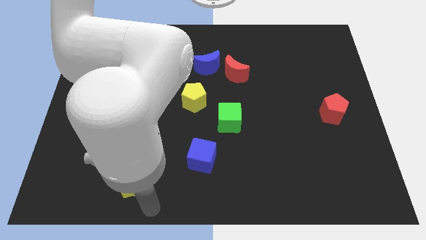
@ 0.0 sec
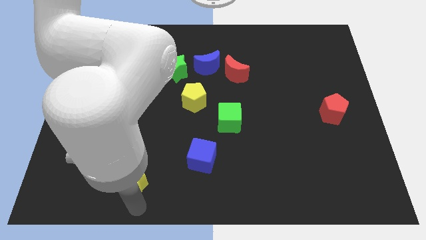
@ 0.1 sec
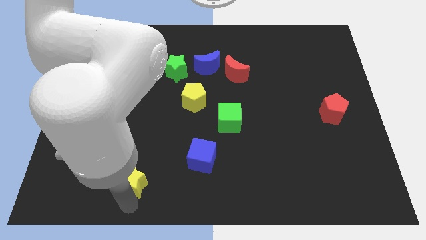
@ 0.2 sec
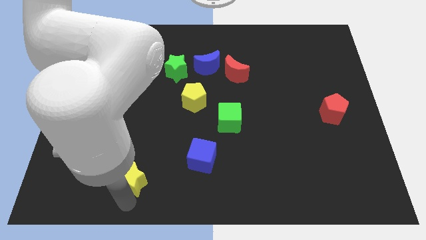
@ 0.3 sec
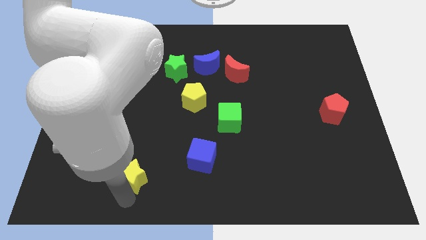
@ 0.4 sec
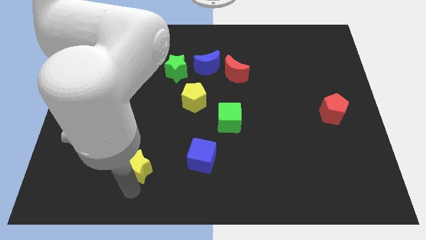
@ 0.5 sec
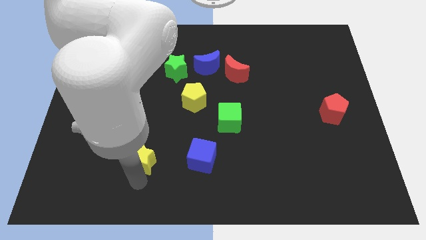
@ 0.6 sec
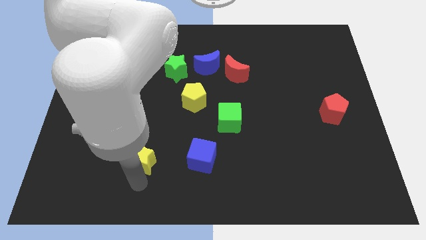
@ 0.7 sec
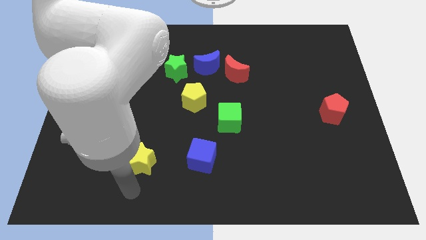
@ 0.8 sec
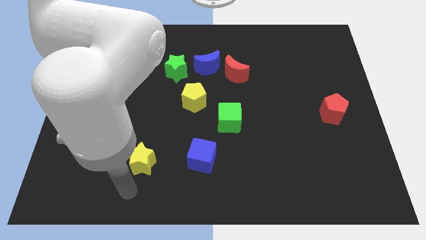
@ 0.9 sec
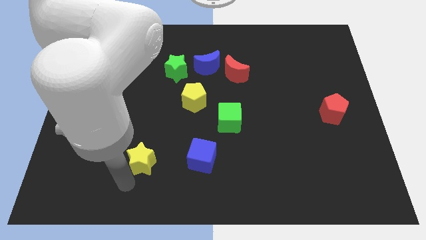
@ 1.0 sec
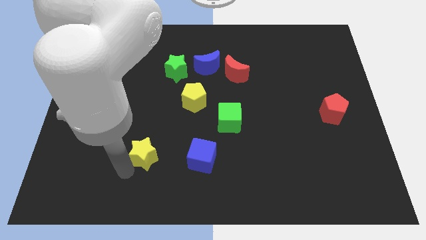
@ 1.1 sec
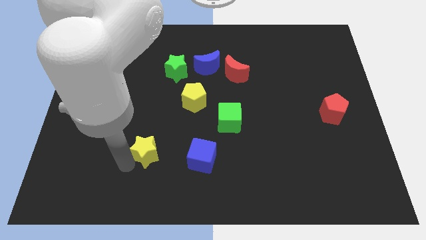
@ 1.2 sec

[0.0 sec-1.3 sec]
slide the yellow star parallel to the blue cube

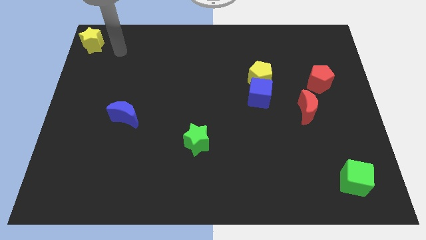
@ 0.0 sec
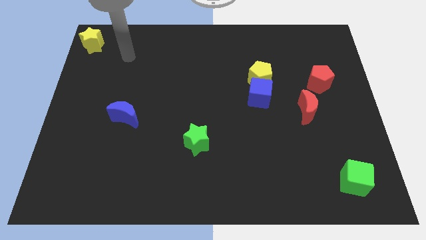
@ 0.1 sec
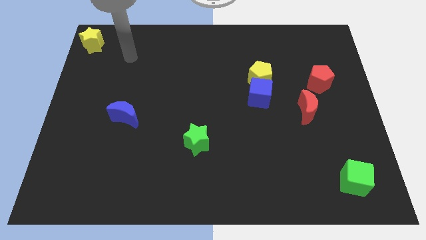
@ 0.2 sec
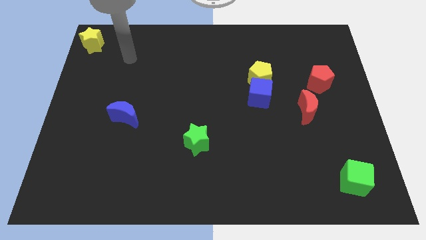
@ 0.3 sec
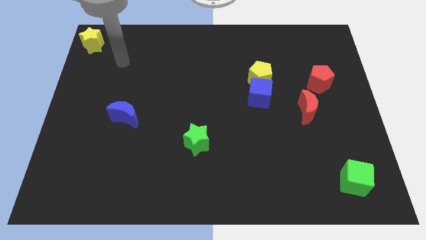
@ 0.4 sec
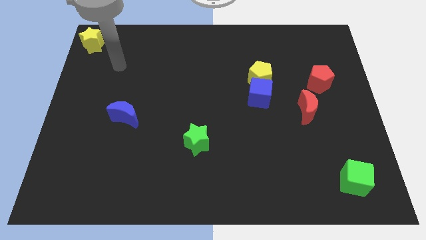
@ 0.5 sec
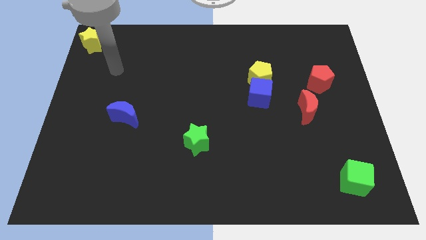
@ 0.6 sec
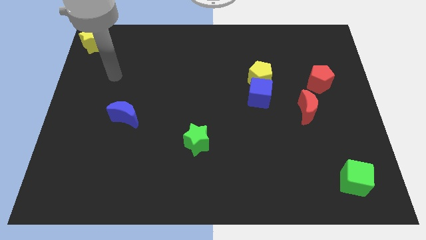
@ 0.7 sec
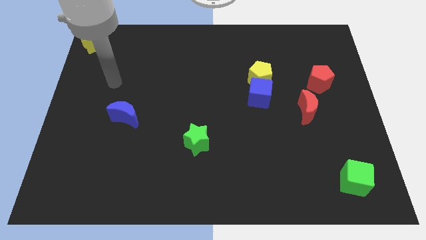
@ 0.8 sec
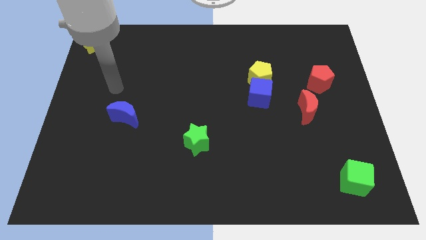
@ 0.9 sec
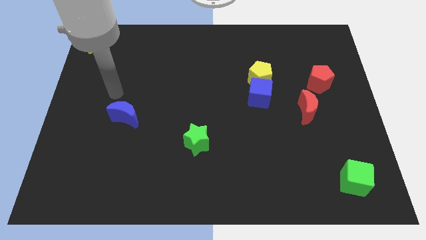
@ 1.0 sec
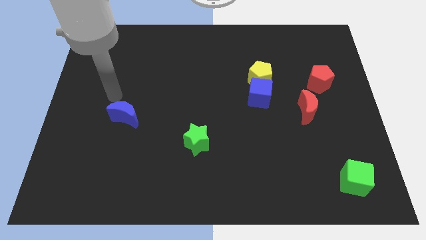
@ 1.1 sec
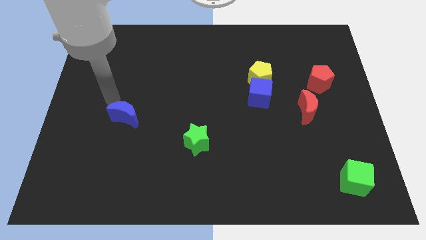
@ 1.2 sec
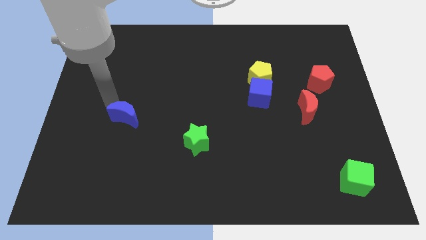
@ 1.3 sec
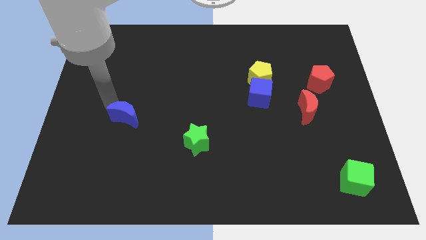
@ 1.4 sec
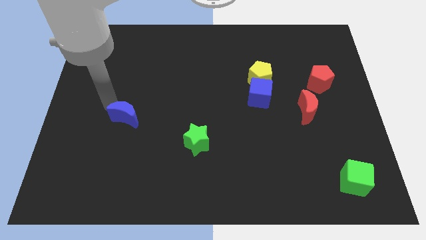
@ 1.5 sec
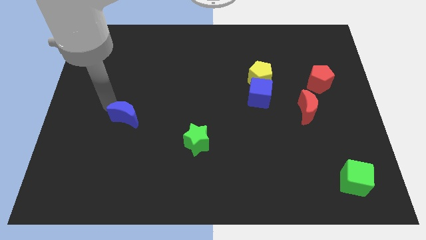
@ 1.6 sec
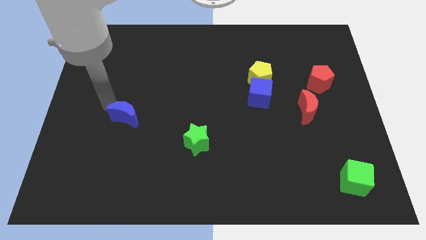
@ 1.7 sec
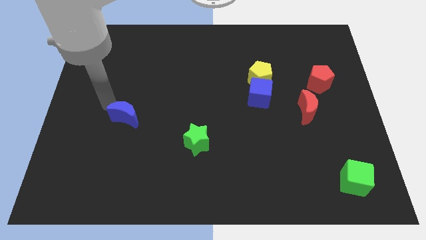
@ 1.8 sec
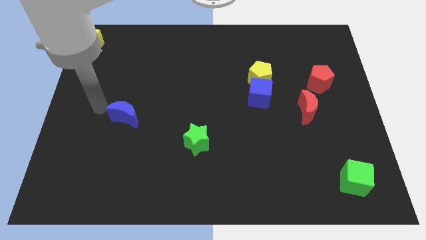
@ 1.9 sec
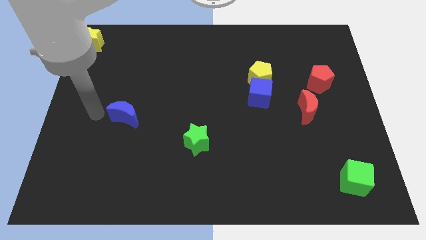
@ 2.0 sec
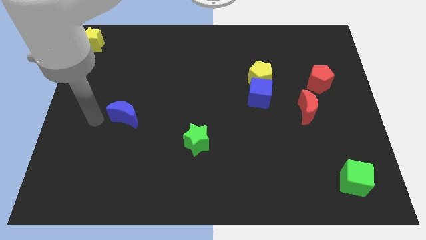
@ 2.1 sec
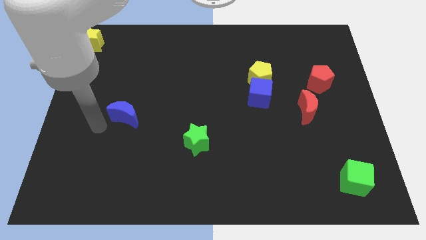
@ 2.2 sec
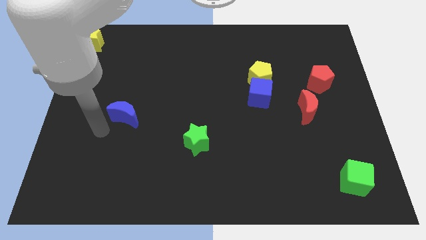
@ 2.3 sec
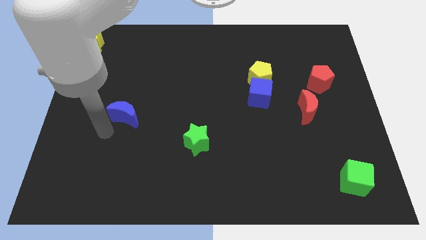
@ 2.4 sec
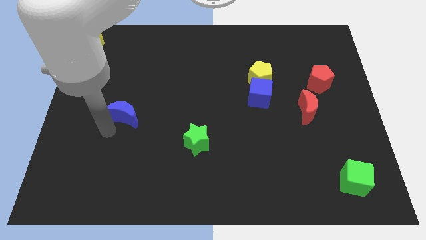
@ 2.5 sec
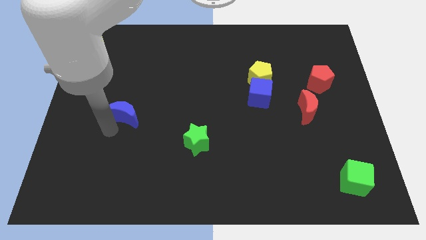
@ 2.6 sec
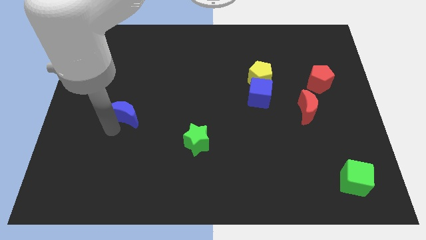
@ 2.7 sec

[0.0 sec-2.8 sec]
point your arm at the bottom of the blue crescent

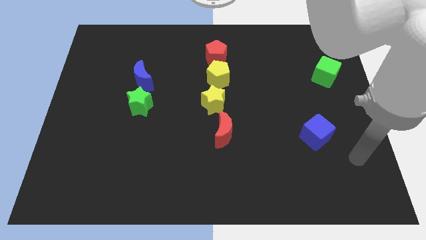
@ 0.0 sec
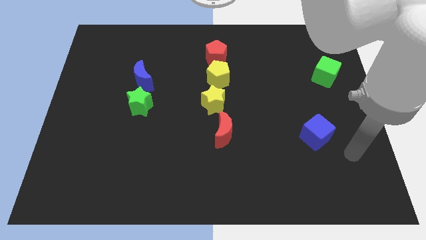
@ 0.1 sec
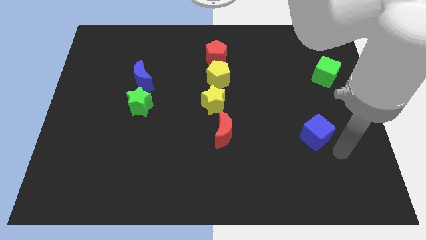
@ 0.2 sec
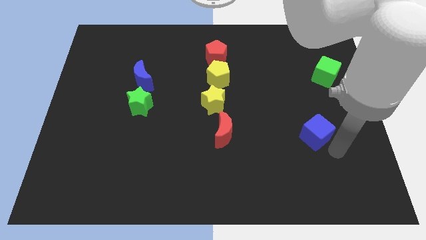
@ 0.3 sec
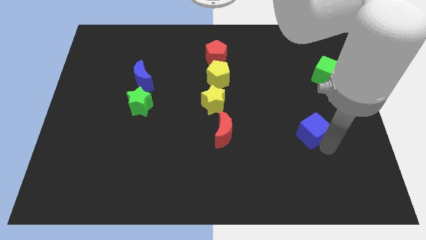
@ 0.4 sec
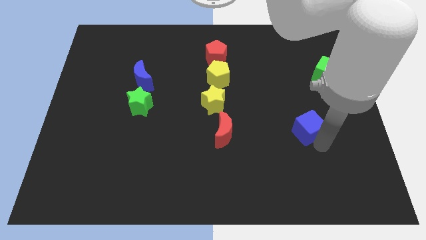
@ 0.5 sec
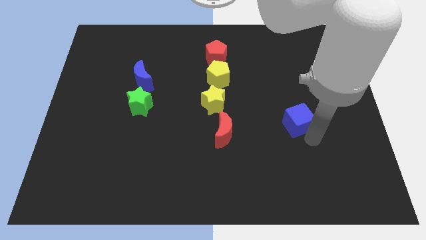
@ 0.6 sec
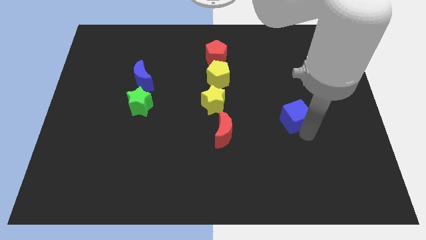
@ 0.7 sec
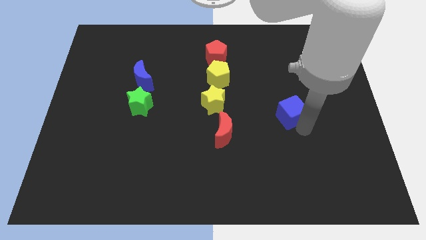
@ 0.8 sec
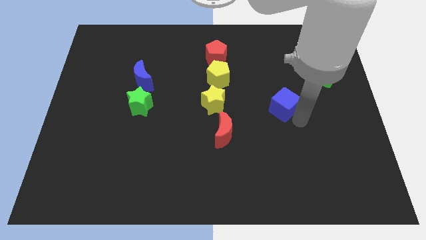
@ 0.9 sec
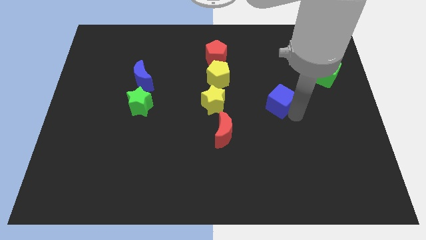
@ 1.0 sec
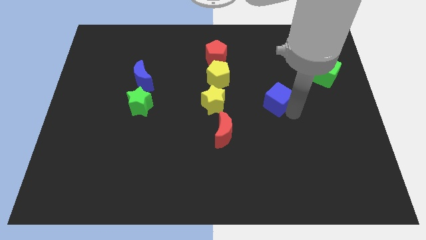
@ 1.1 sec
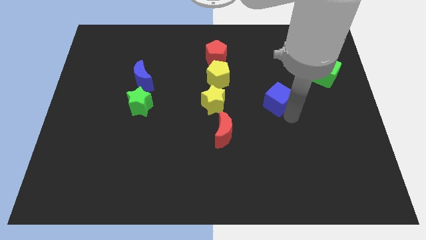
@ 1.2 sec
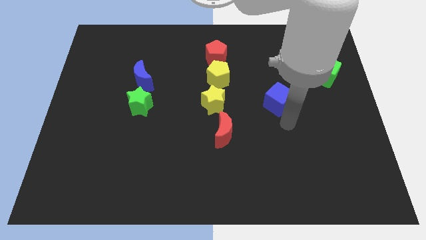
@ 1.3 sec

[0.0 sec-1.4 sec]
push blue cube to the right side of the yellow star

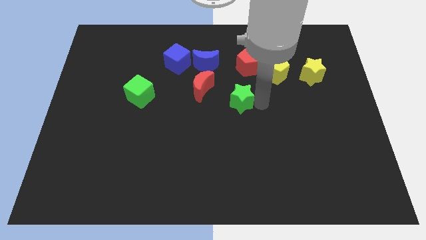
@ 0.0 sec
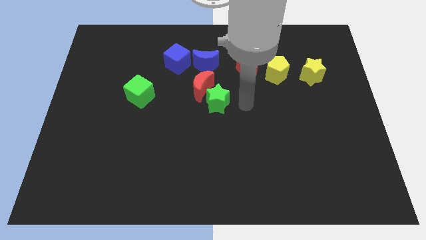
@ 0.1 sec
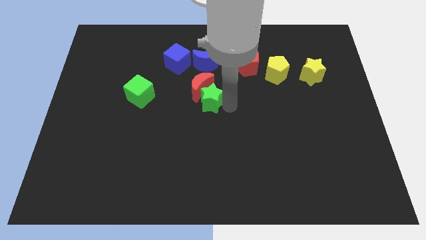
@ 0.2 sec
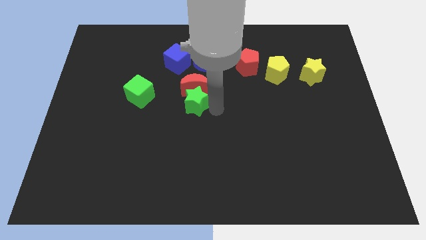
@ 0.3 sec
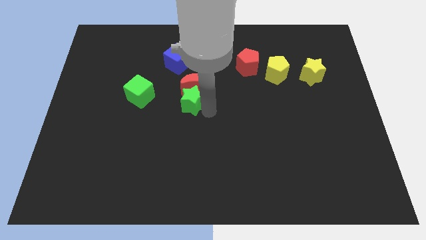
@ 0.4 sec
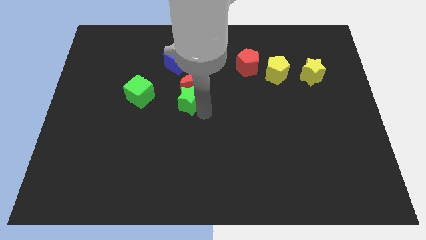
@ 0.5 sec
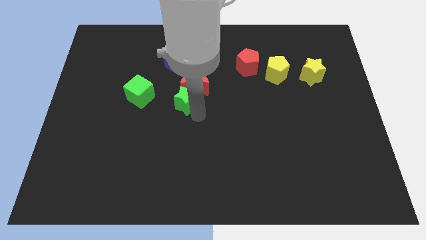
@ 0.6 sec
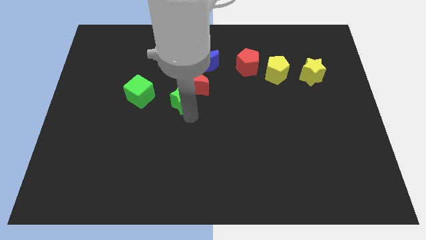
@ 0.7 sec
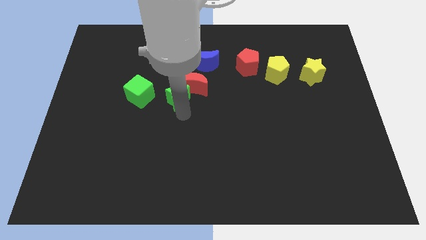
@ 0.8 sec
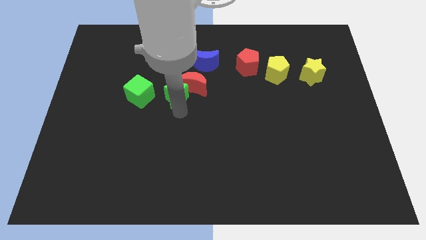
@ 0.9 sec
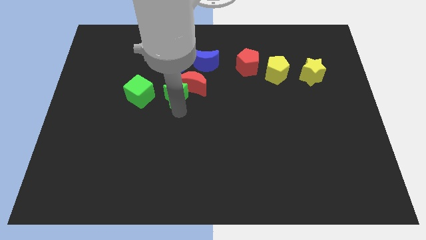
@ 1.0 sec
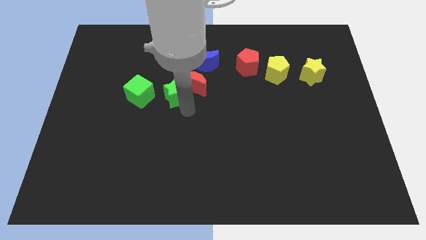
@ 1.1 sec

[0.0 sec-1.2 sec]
move the green star left to the red crescent

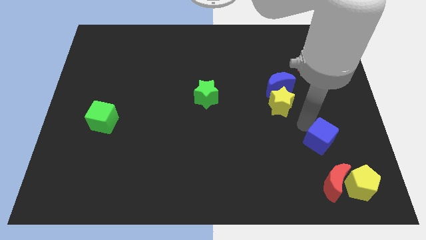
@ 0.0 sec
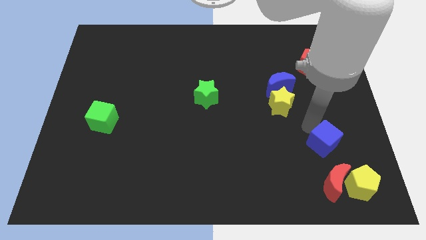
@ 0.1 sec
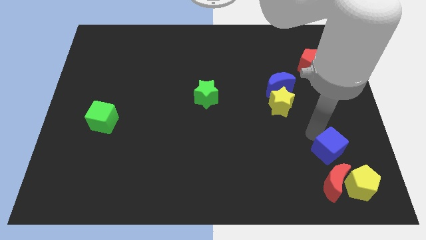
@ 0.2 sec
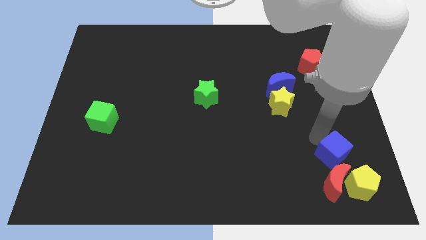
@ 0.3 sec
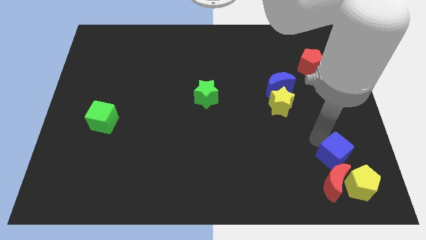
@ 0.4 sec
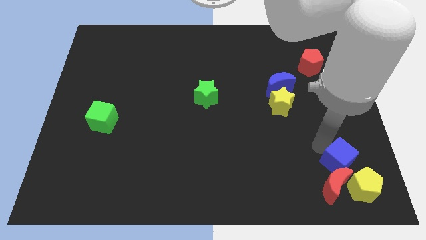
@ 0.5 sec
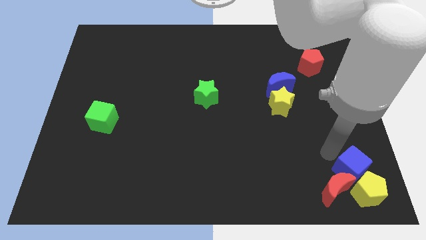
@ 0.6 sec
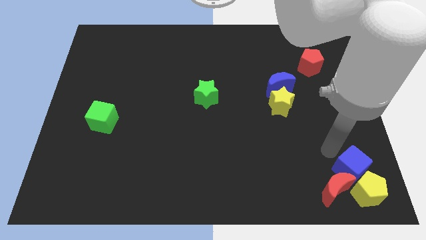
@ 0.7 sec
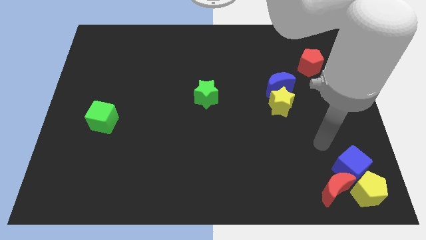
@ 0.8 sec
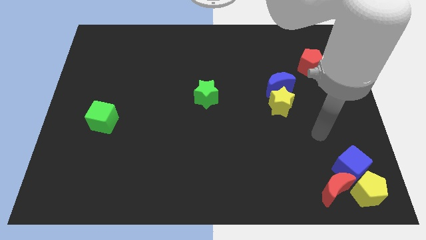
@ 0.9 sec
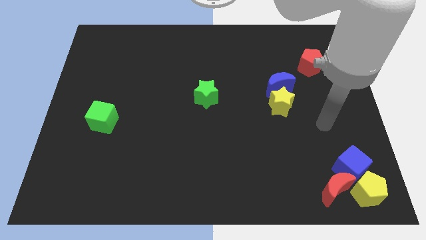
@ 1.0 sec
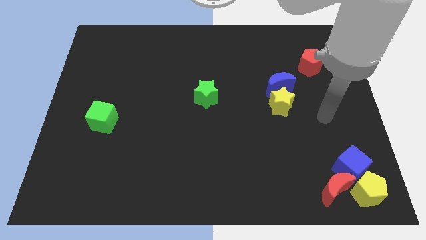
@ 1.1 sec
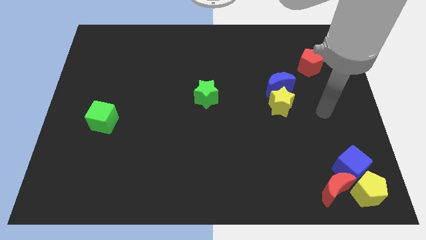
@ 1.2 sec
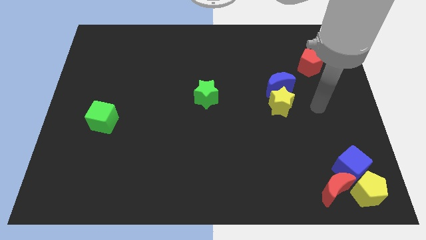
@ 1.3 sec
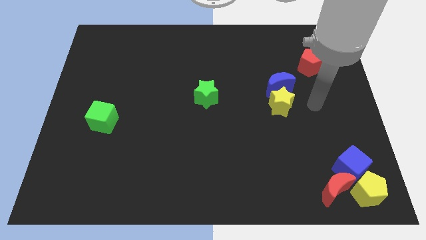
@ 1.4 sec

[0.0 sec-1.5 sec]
put the blue cube into the yellow pentagon

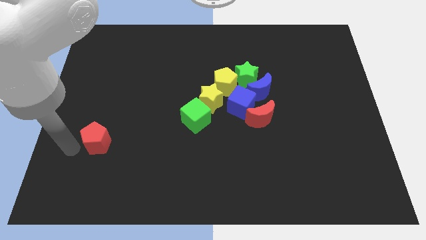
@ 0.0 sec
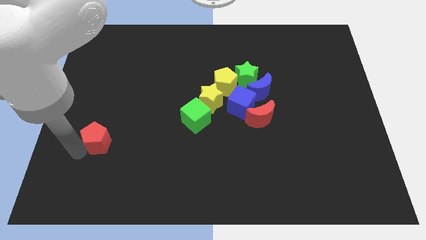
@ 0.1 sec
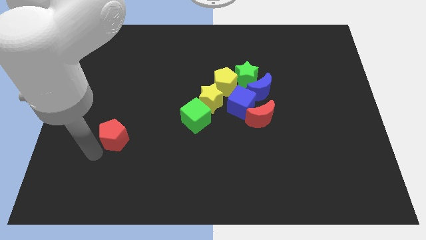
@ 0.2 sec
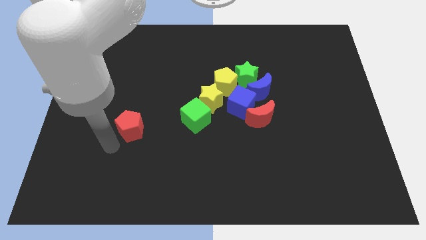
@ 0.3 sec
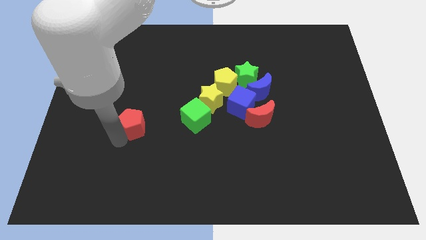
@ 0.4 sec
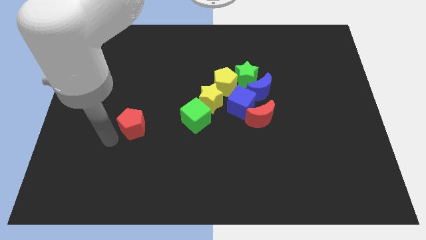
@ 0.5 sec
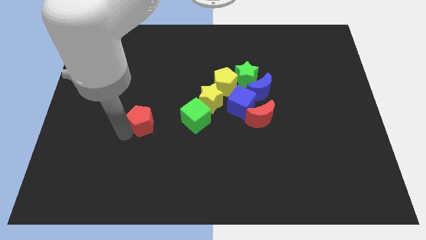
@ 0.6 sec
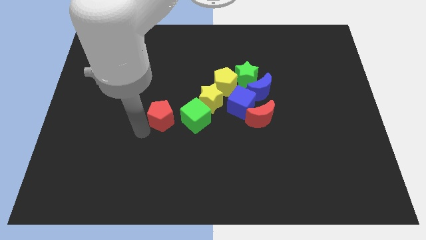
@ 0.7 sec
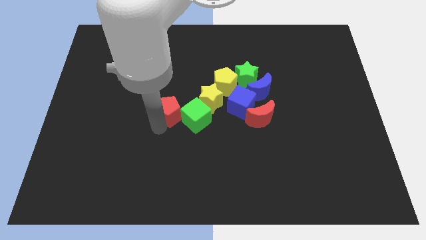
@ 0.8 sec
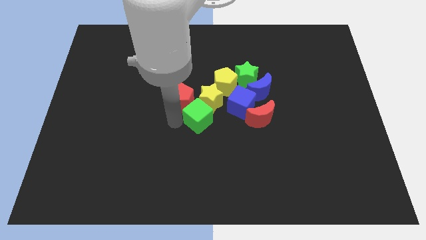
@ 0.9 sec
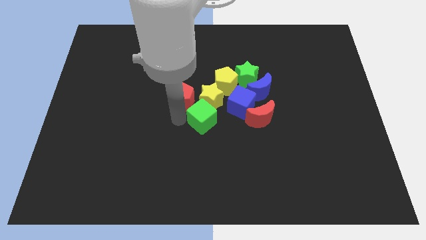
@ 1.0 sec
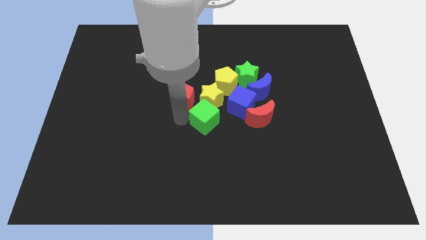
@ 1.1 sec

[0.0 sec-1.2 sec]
move the red pentagon to the left of the yellow star
